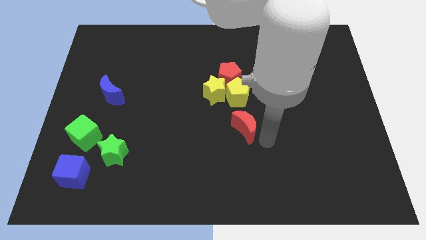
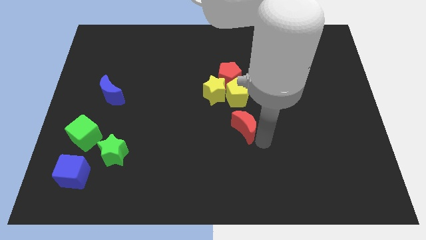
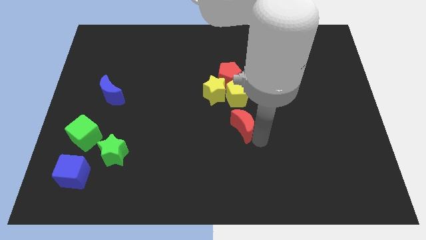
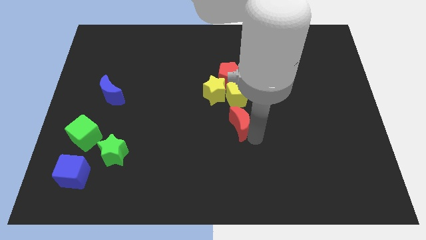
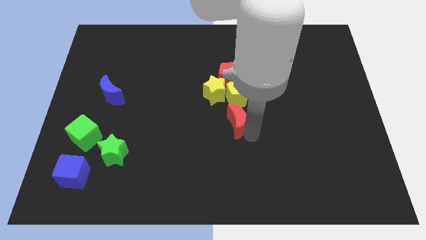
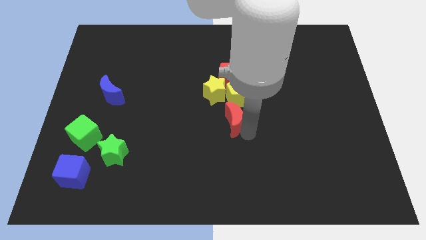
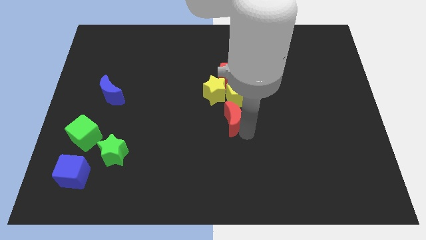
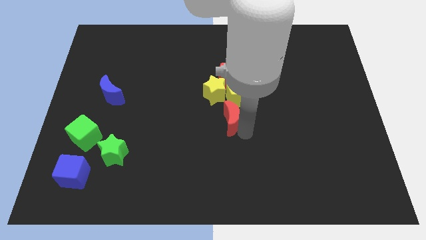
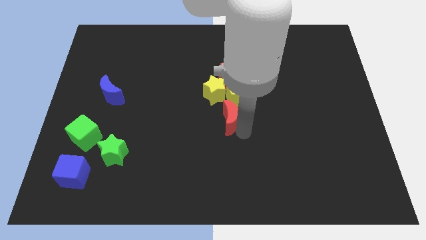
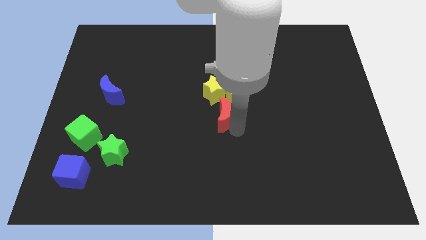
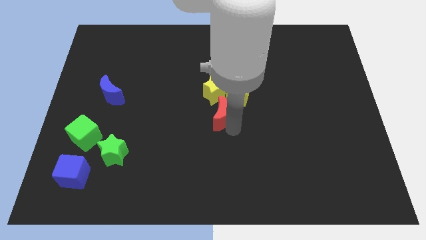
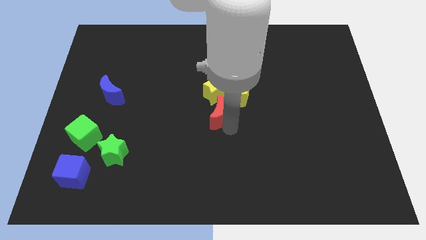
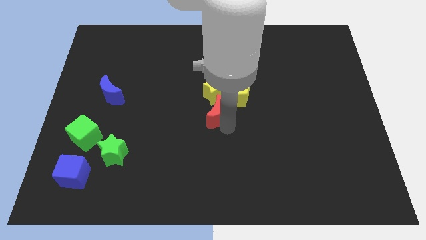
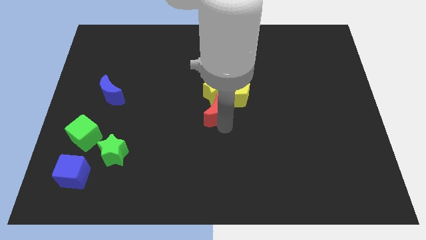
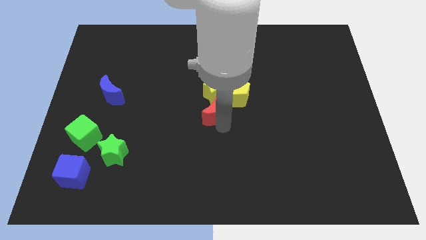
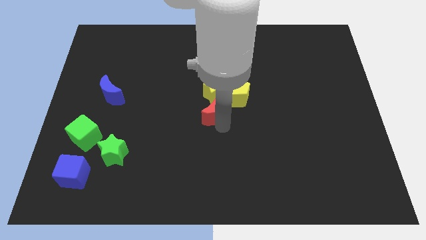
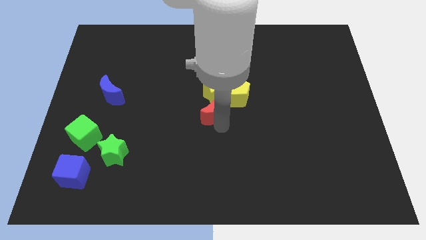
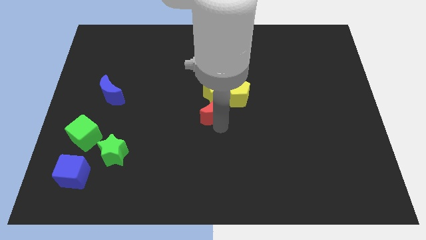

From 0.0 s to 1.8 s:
push the red crescent to the bottom of the yellow star

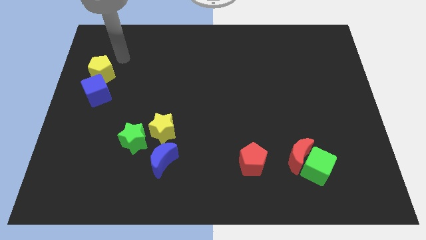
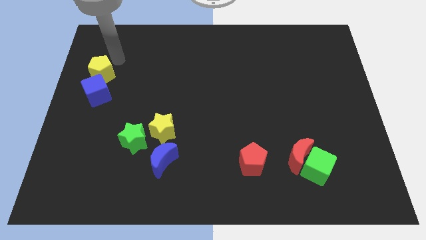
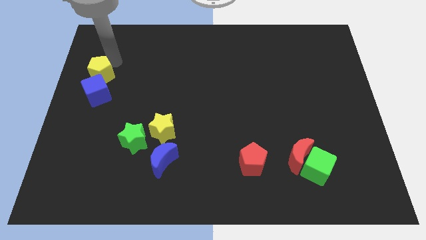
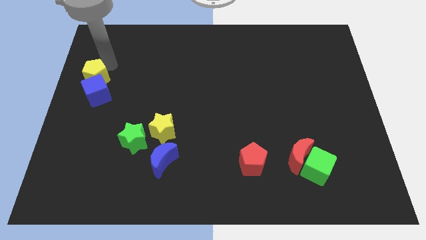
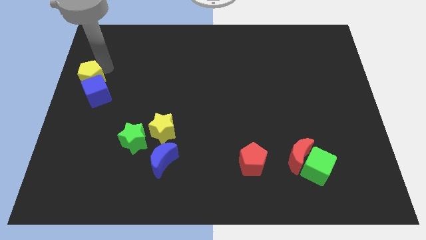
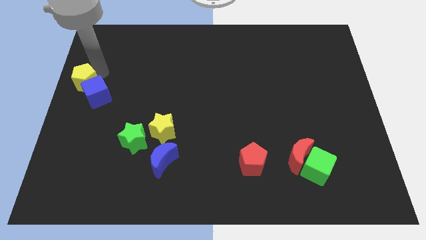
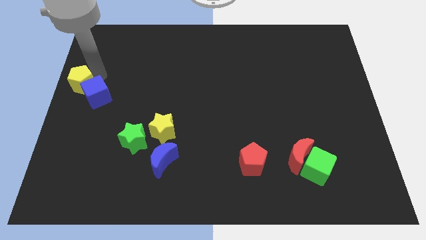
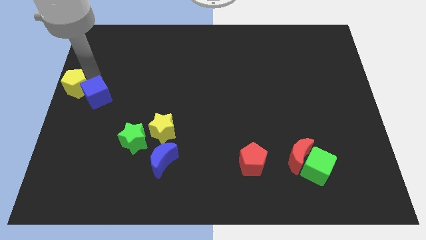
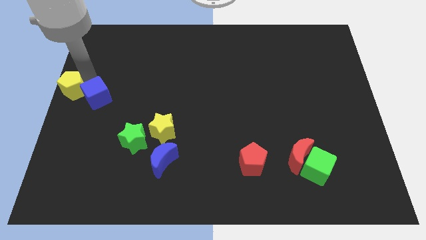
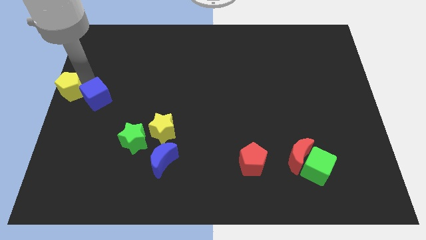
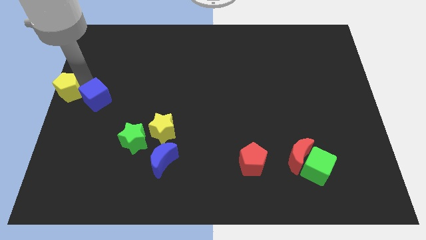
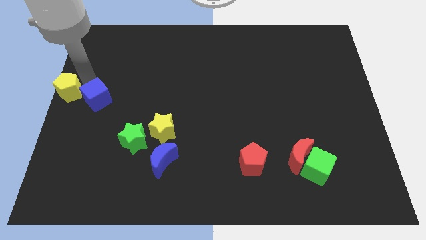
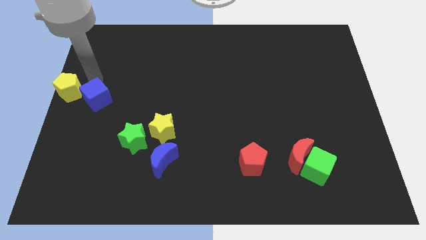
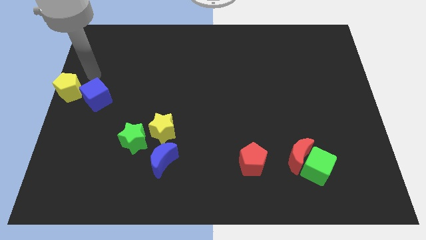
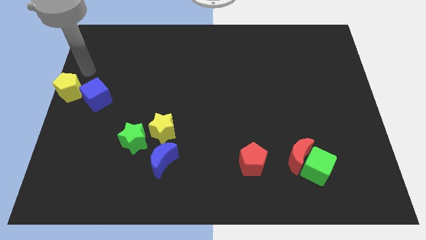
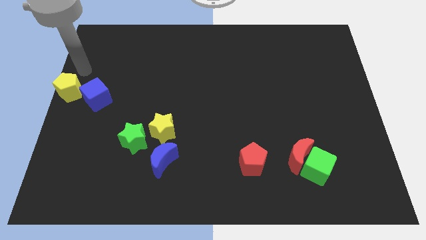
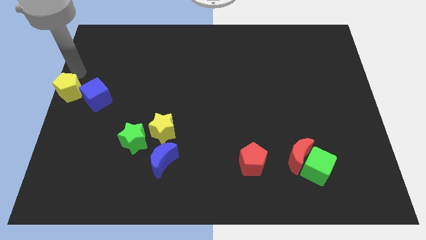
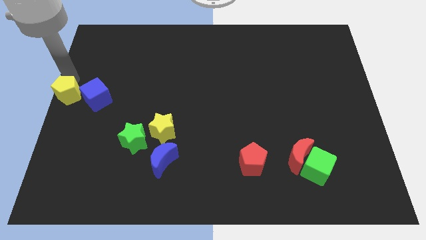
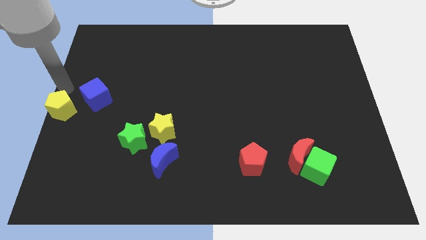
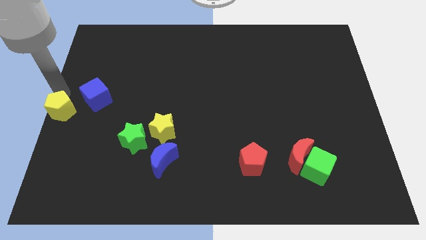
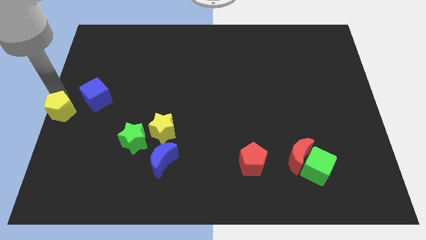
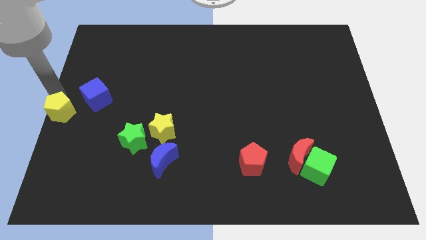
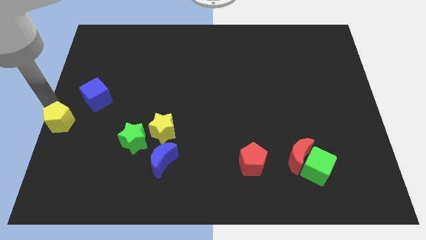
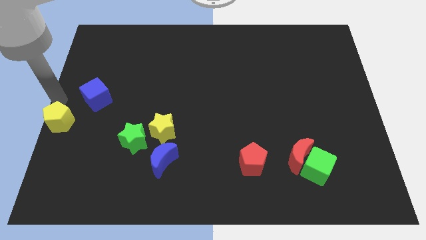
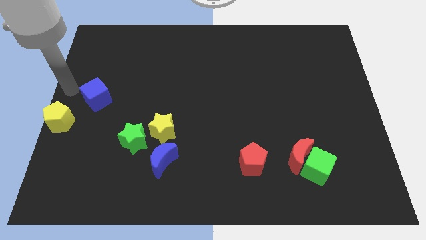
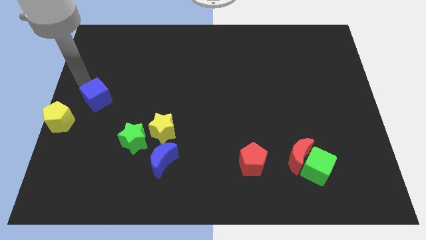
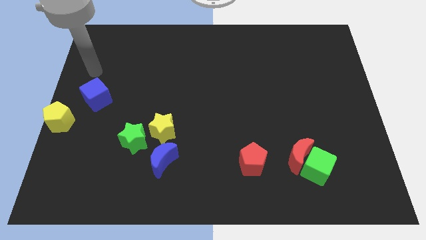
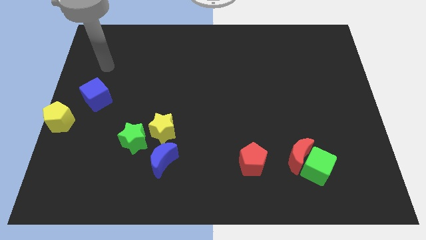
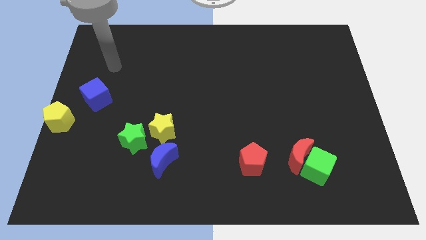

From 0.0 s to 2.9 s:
push the yellow pentagon towards bottom

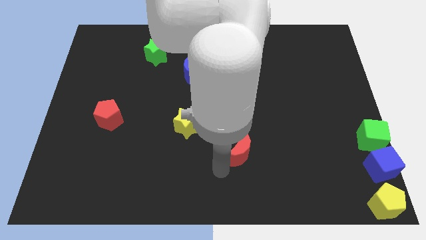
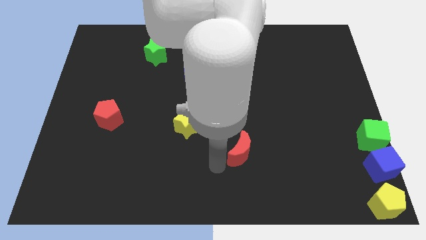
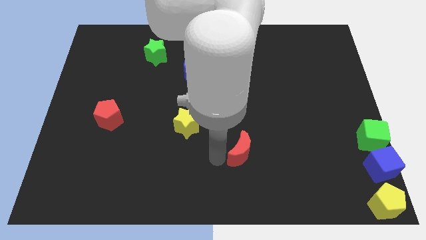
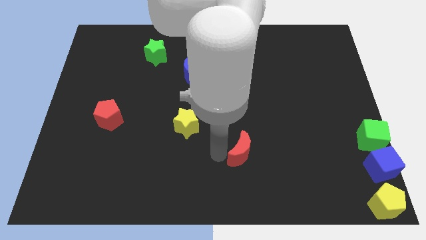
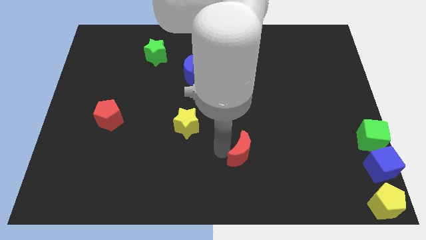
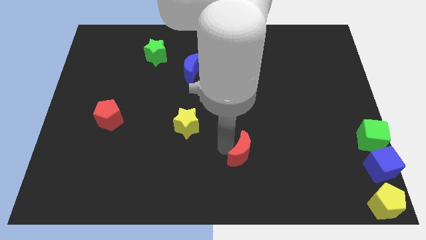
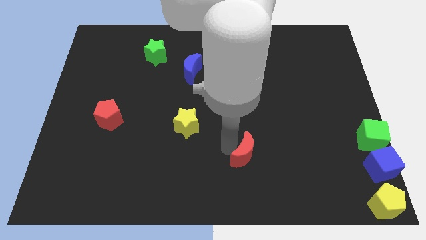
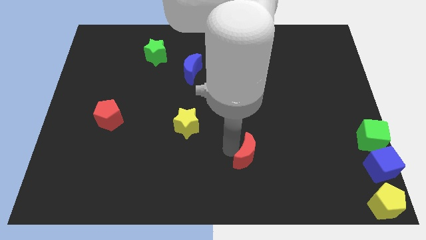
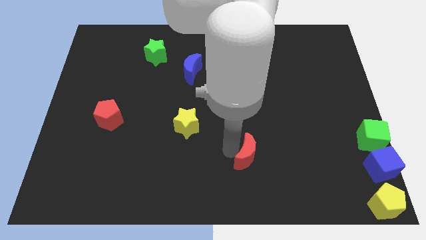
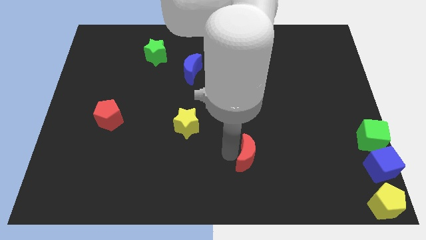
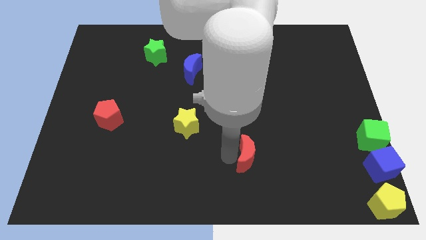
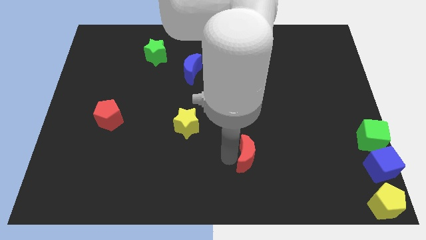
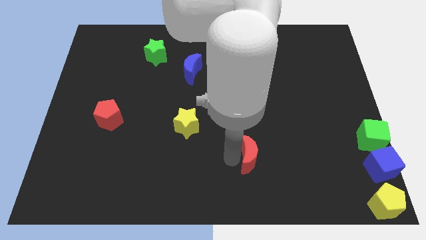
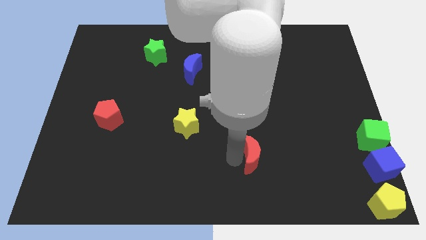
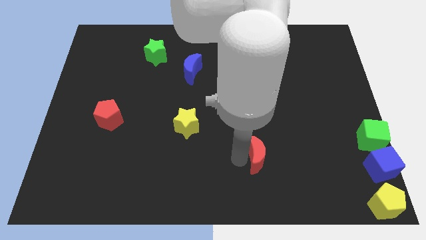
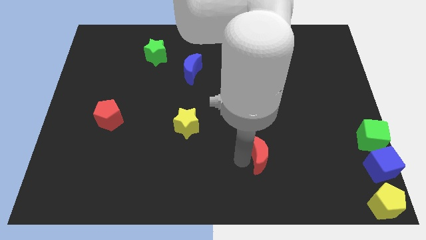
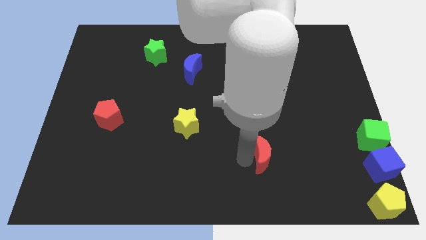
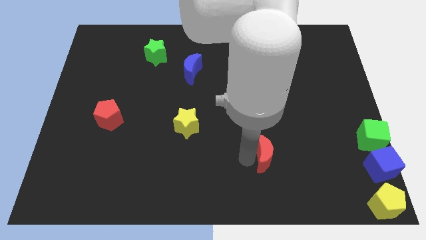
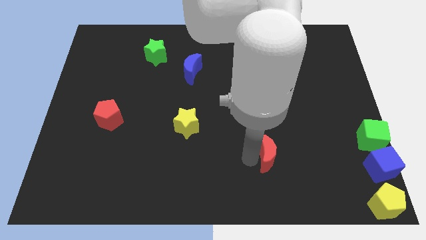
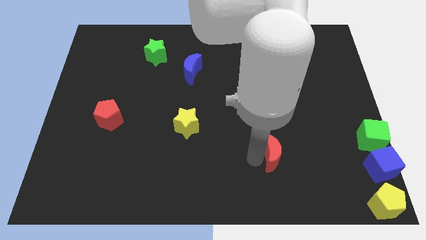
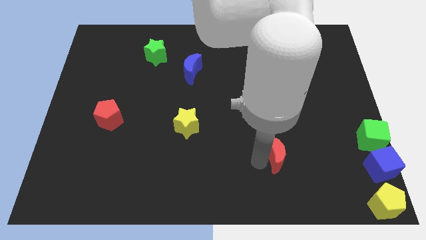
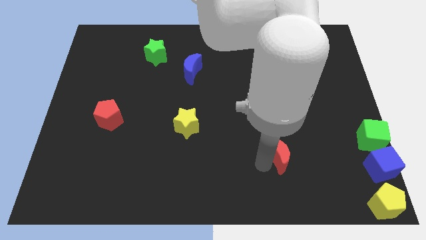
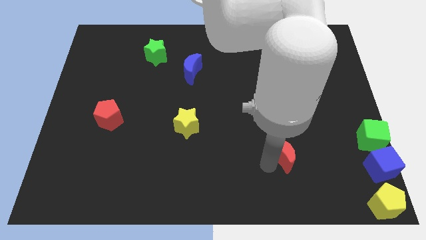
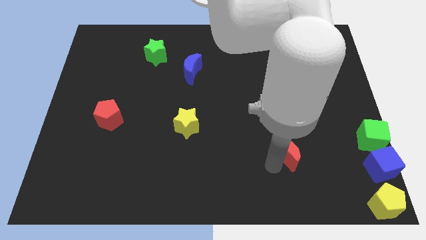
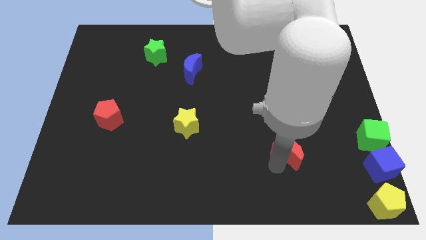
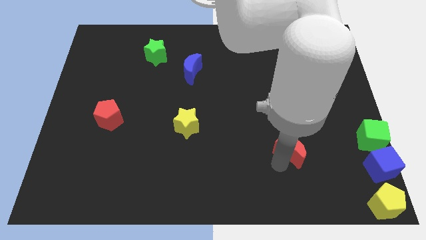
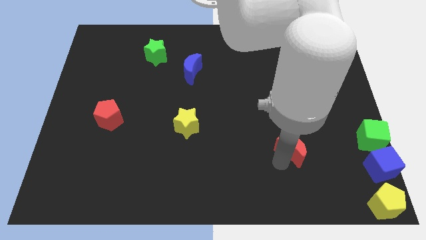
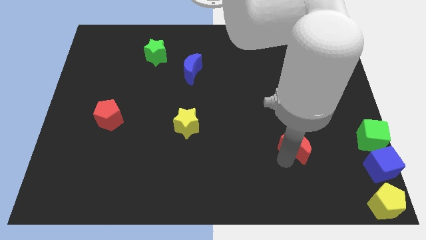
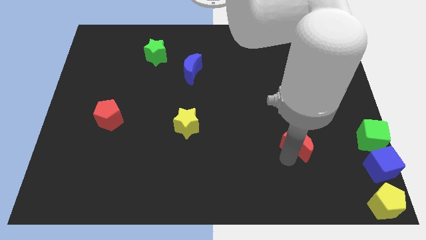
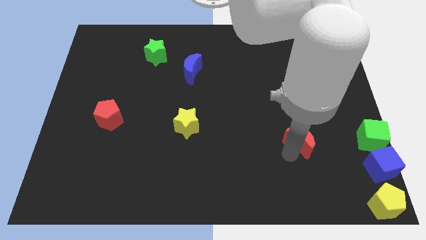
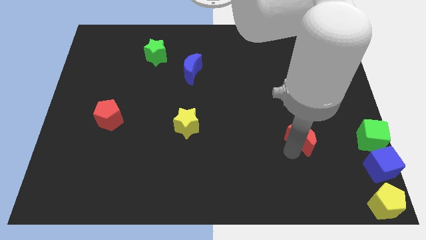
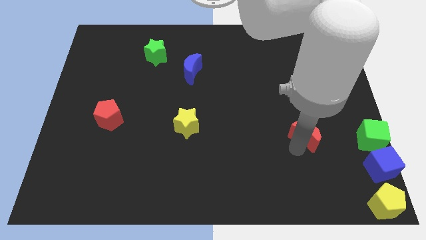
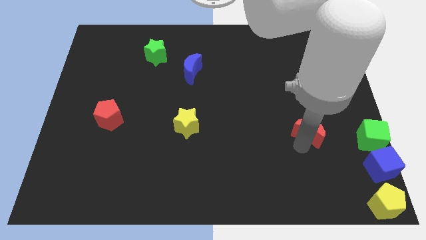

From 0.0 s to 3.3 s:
place the red crescent in between the yellow star and green cube

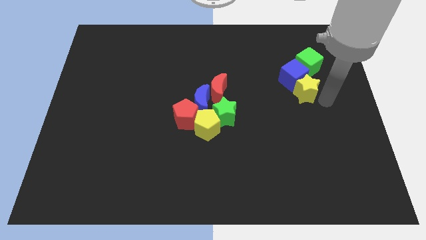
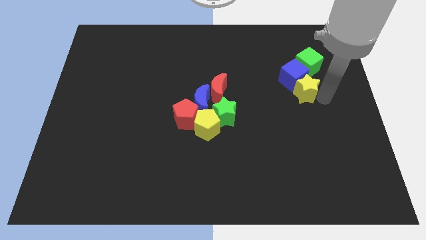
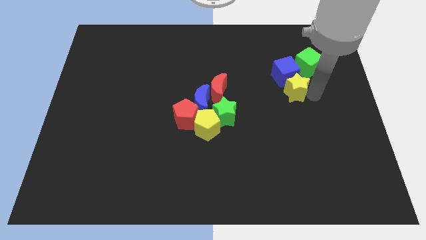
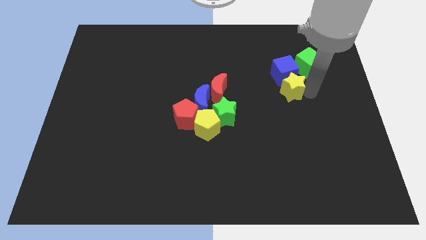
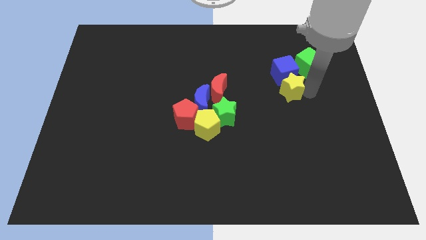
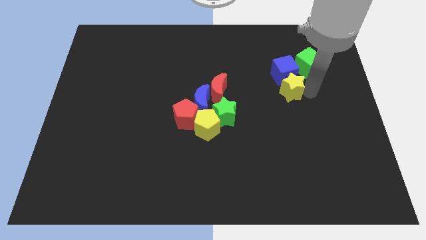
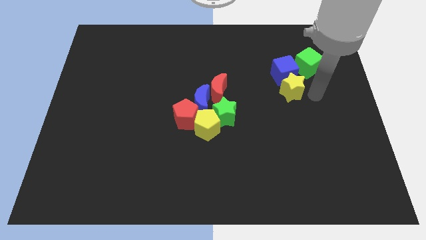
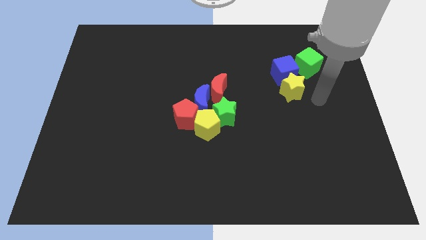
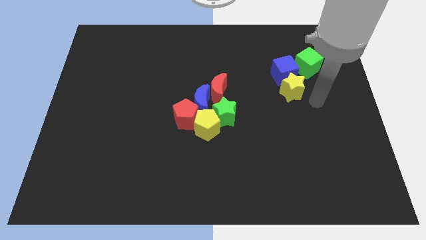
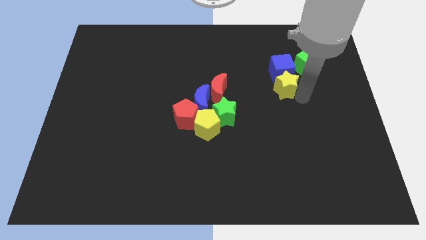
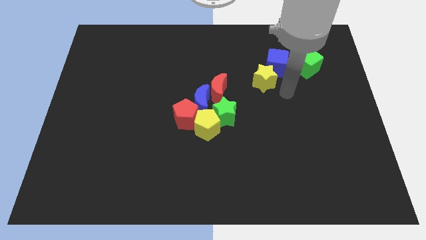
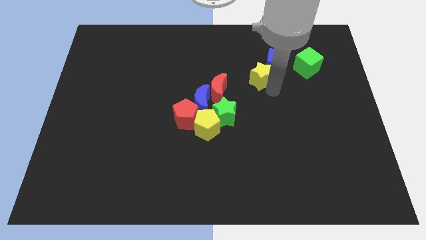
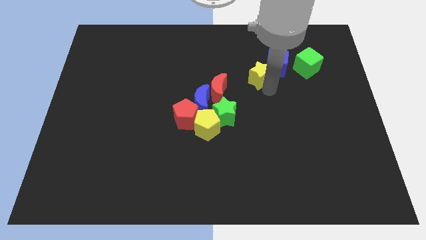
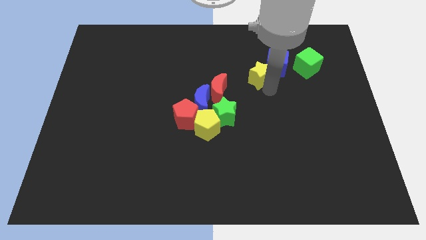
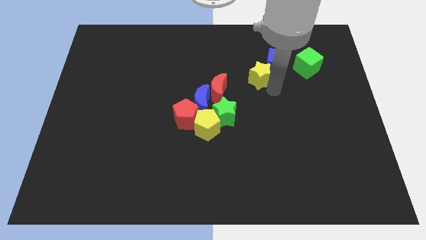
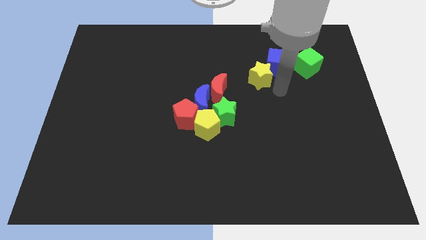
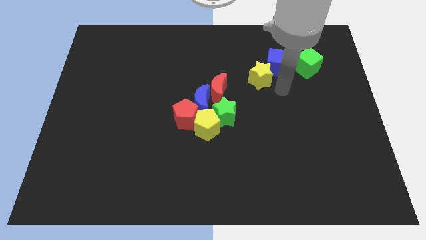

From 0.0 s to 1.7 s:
push the yellow star diagonal to the green star
